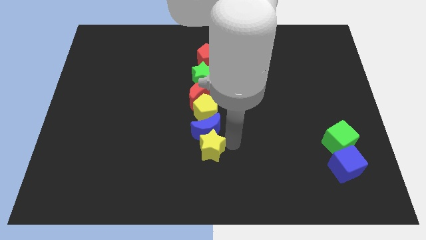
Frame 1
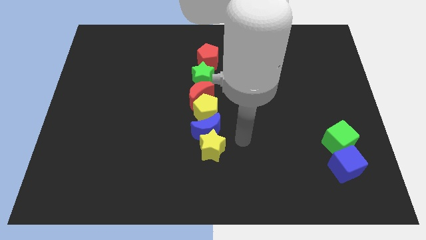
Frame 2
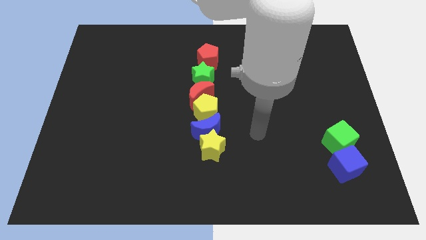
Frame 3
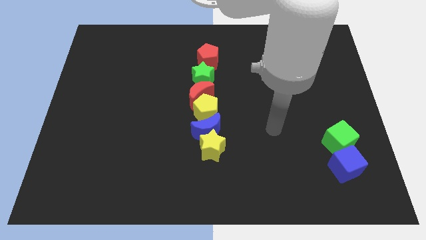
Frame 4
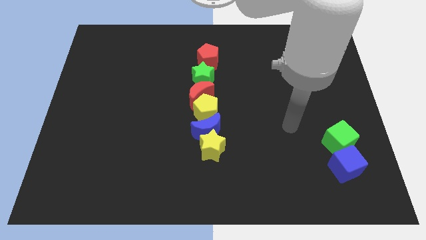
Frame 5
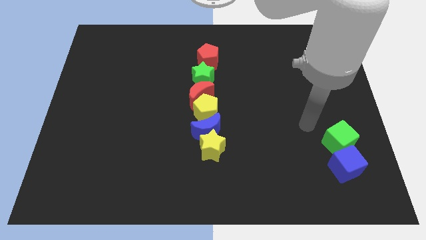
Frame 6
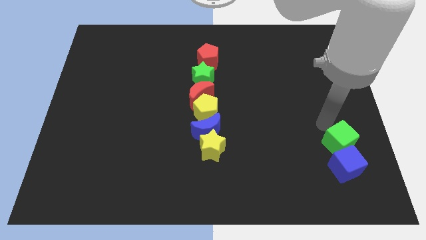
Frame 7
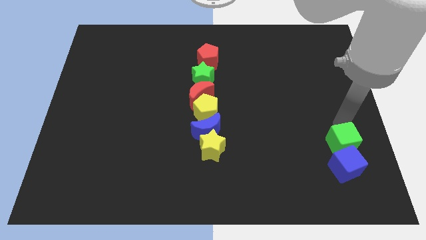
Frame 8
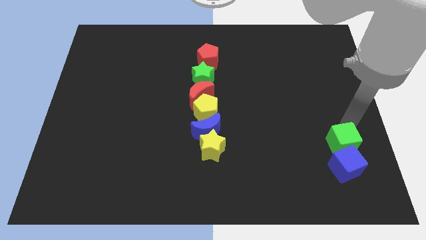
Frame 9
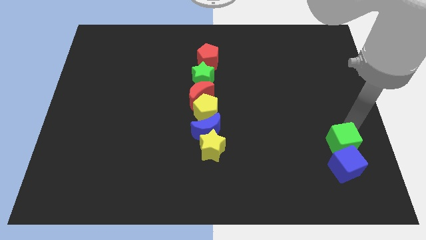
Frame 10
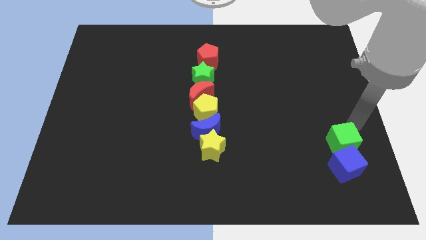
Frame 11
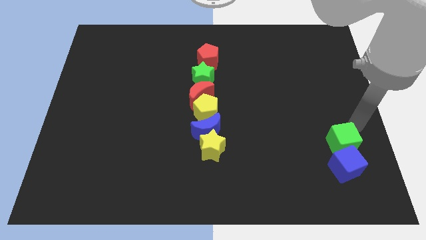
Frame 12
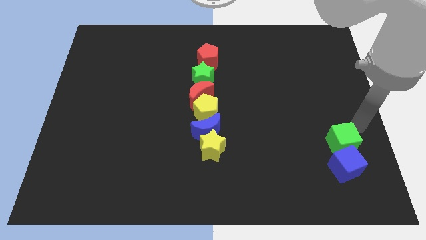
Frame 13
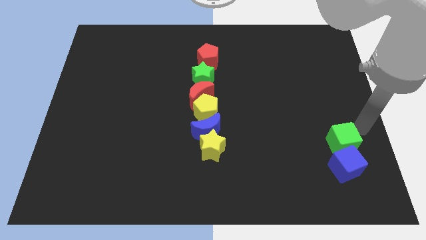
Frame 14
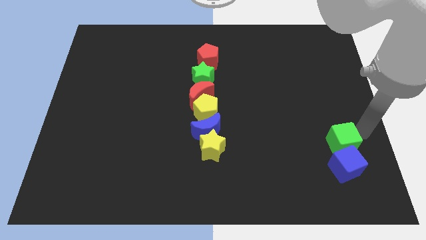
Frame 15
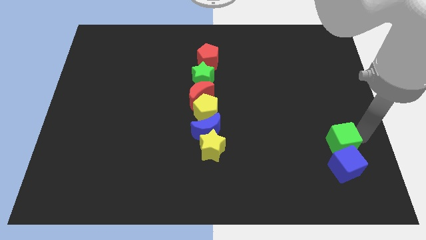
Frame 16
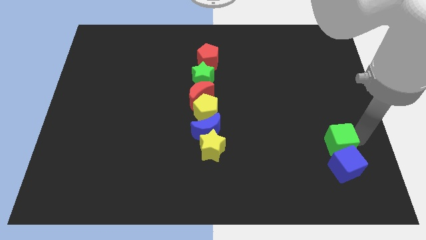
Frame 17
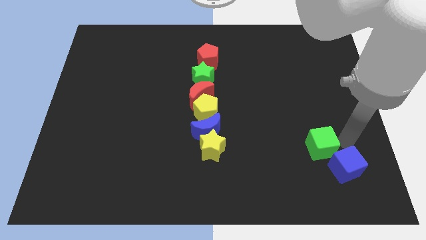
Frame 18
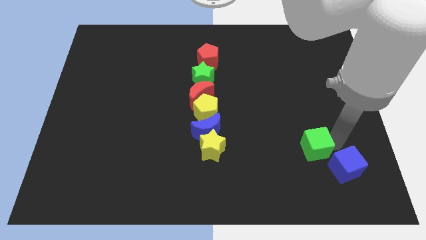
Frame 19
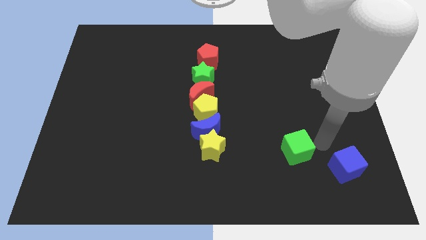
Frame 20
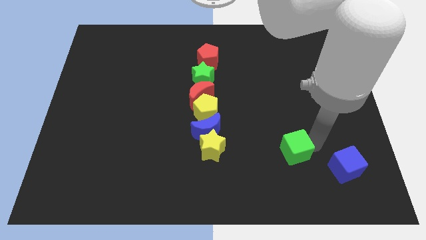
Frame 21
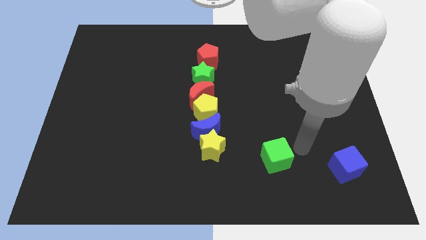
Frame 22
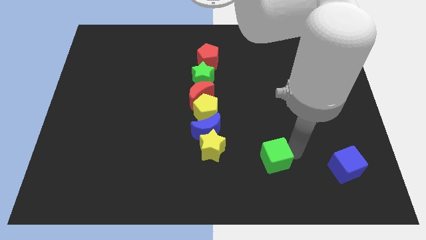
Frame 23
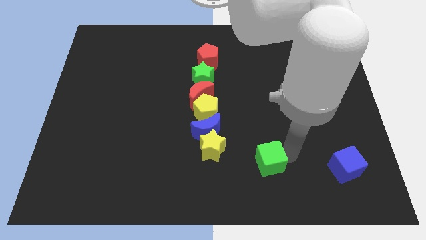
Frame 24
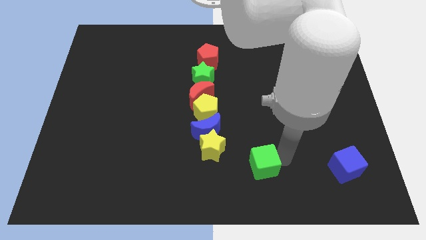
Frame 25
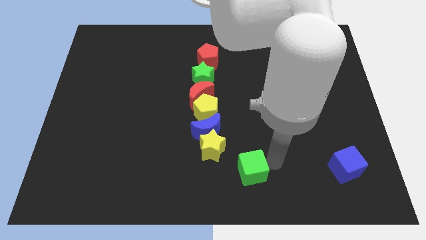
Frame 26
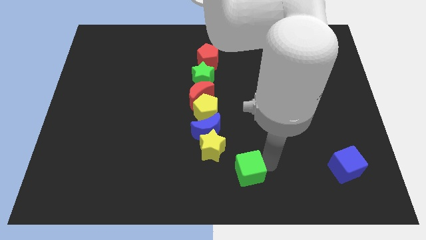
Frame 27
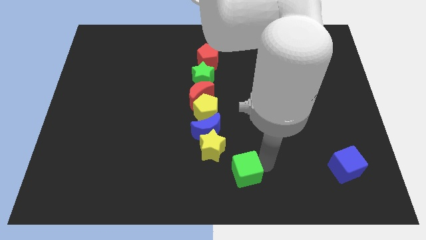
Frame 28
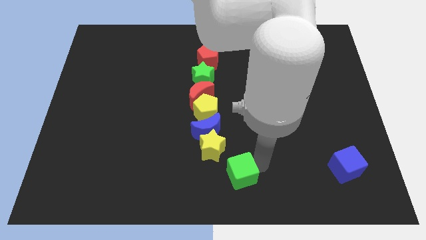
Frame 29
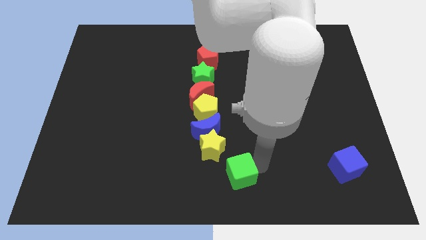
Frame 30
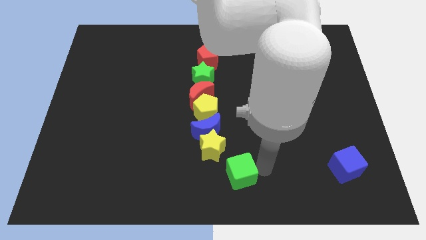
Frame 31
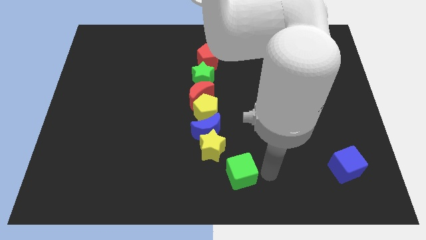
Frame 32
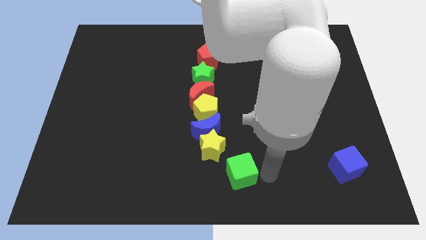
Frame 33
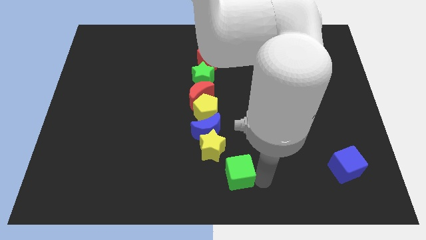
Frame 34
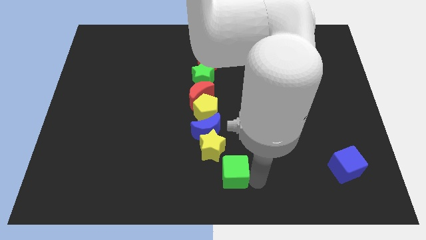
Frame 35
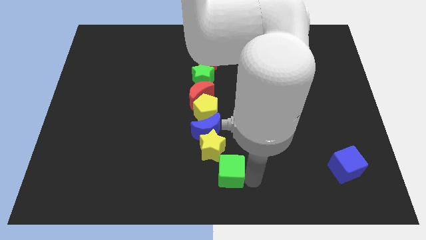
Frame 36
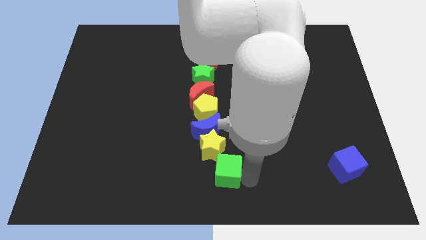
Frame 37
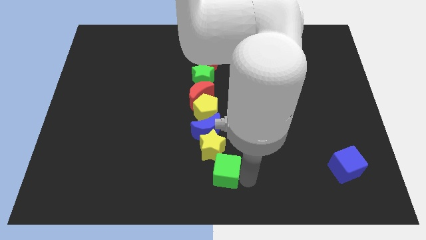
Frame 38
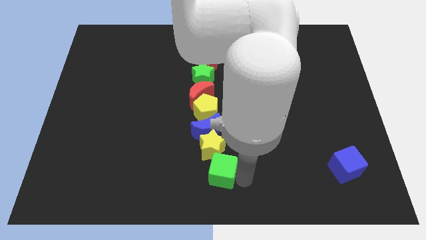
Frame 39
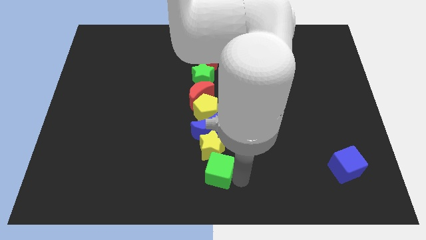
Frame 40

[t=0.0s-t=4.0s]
move the green cube away from the blue cube

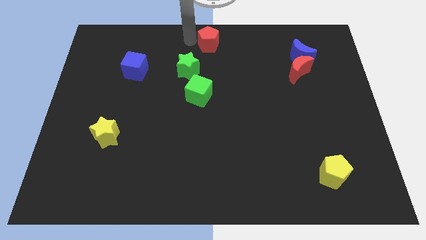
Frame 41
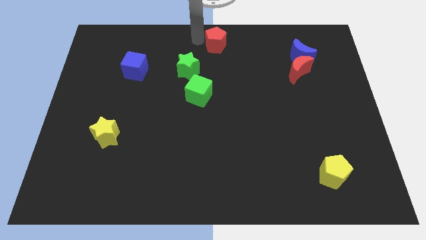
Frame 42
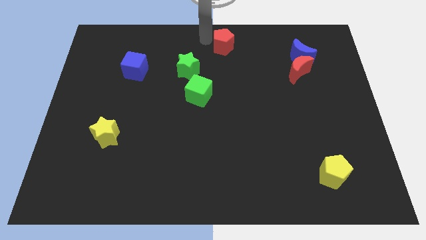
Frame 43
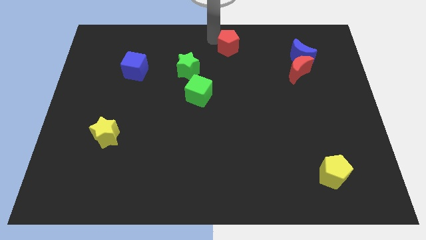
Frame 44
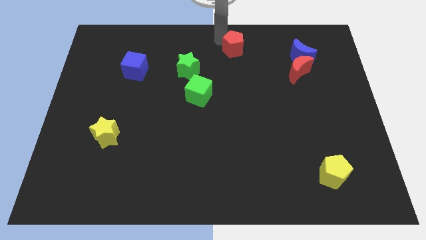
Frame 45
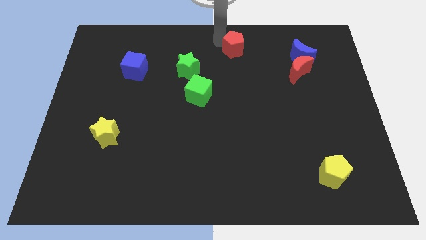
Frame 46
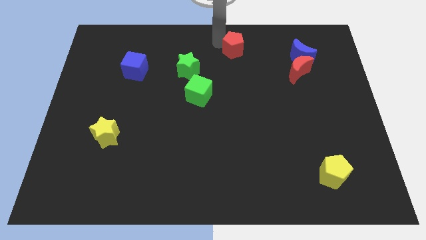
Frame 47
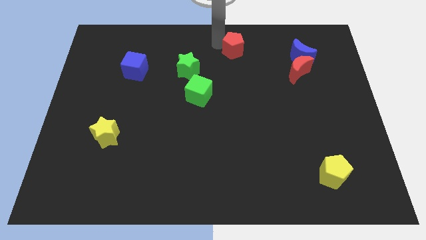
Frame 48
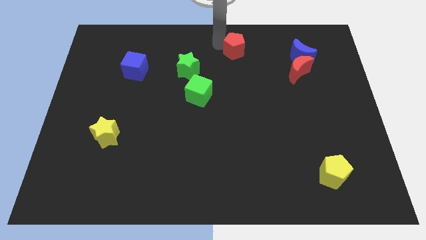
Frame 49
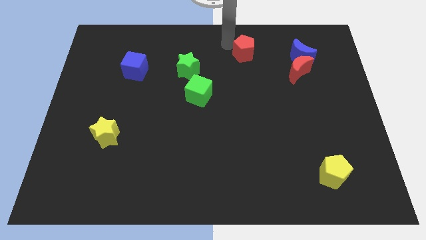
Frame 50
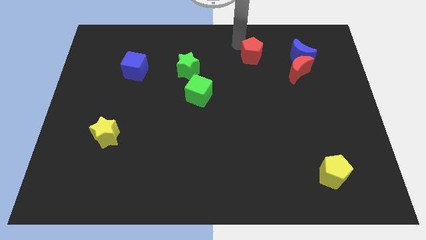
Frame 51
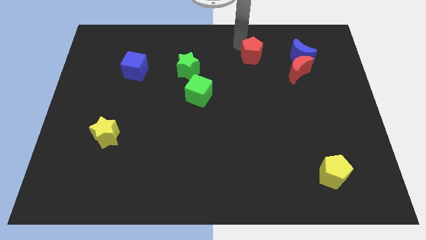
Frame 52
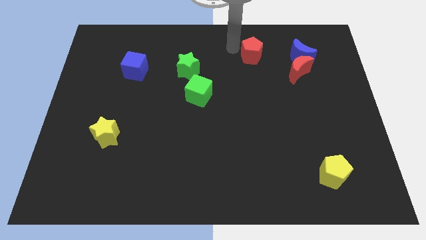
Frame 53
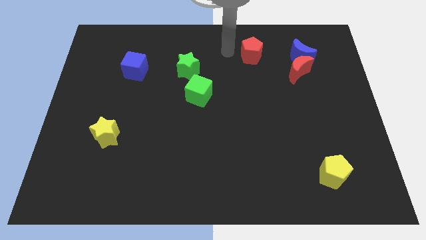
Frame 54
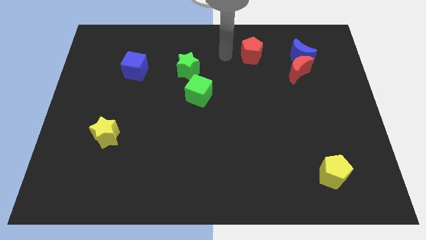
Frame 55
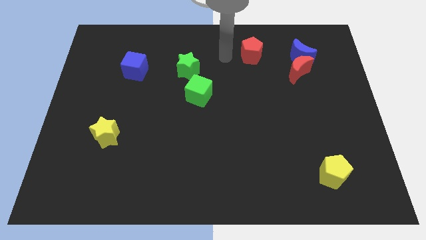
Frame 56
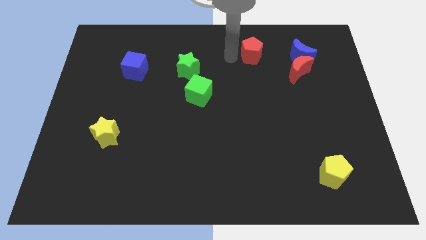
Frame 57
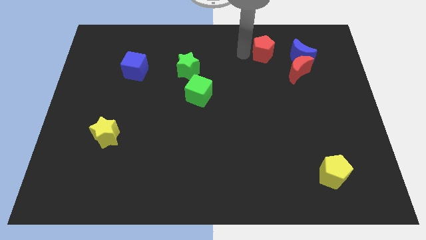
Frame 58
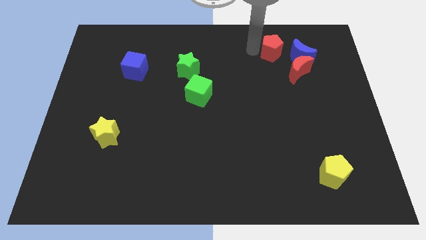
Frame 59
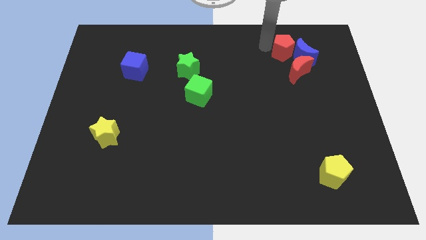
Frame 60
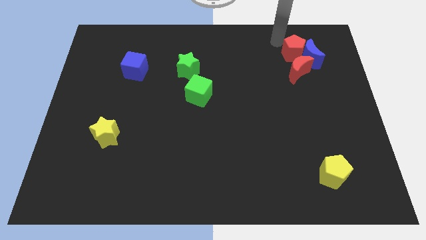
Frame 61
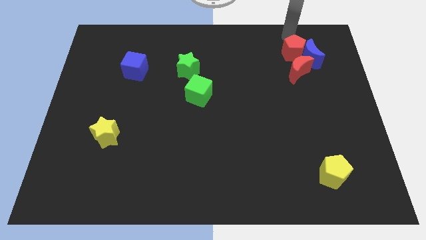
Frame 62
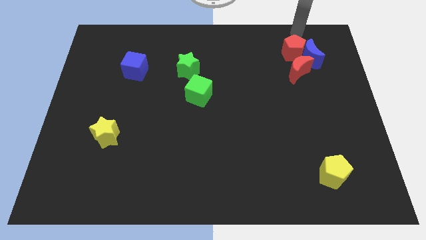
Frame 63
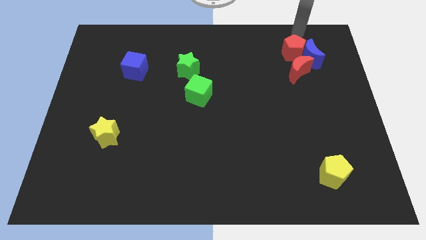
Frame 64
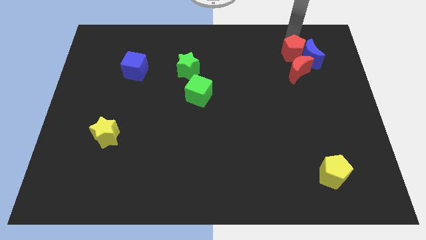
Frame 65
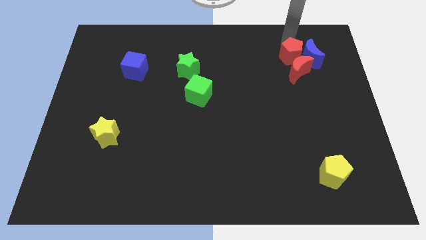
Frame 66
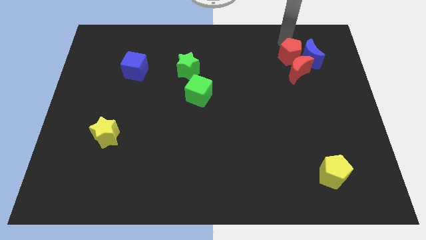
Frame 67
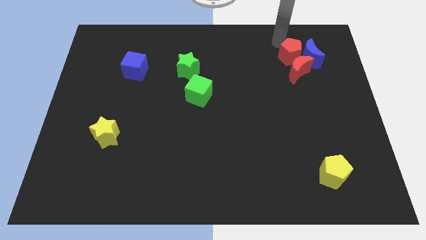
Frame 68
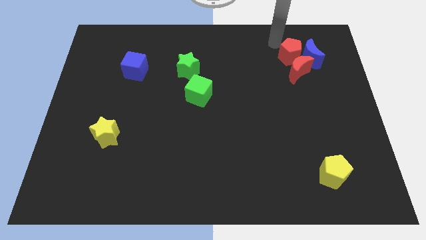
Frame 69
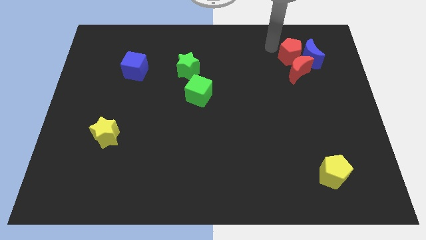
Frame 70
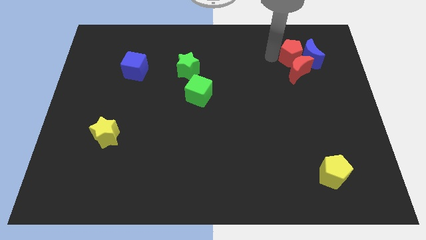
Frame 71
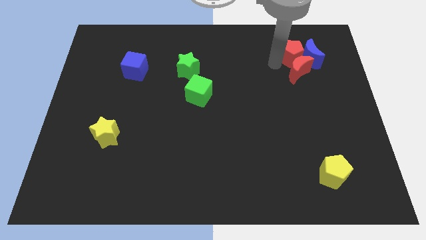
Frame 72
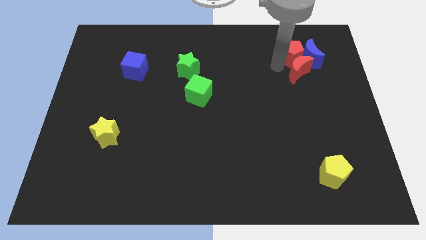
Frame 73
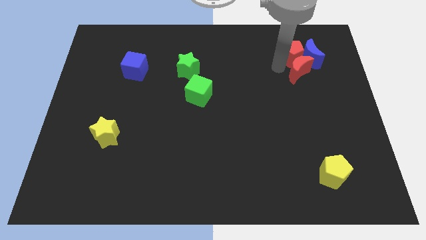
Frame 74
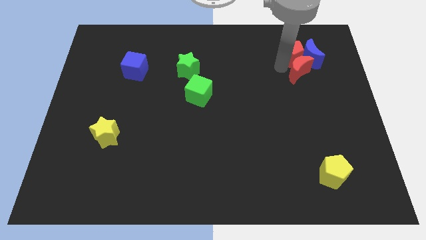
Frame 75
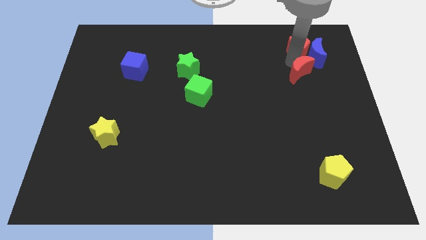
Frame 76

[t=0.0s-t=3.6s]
push the red pentagon in between red and blue moon

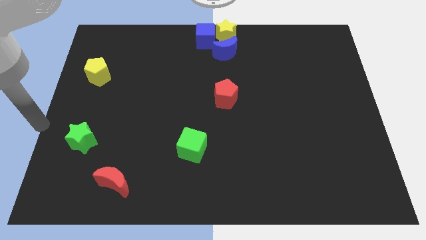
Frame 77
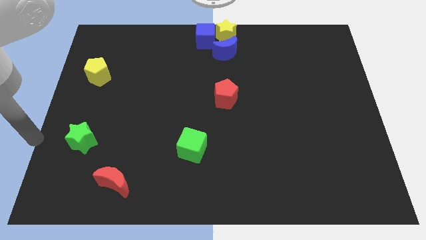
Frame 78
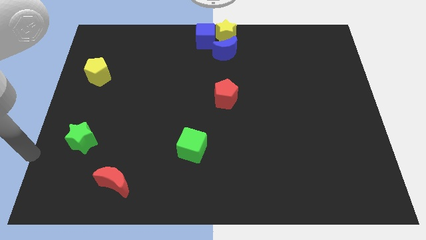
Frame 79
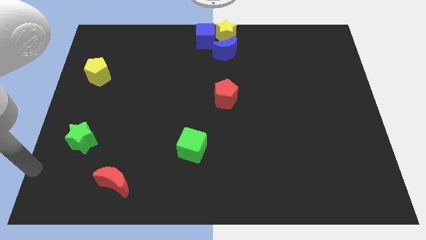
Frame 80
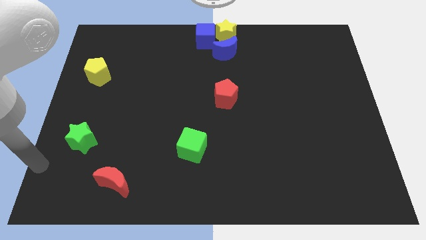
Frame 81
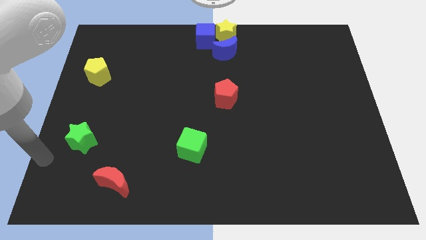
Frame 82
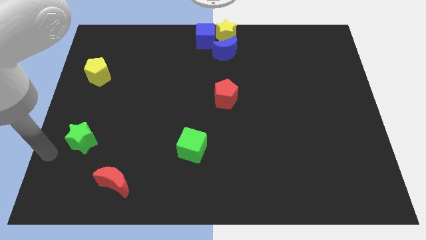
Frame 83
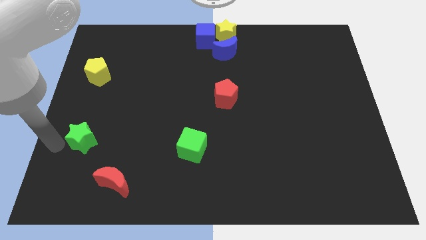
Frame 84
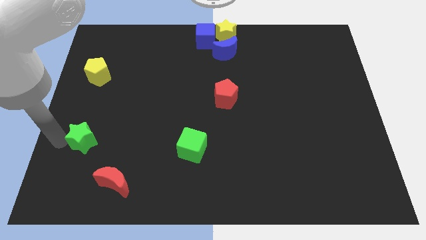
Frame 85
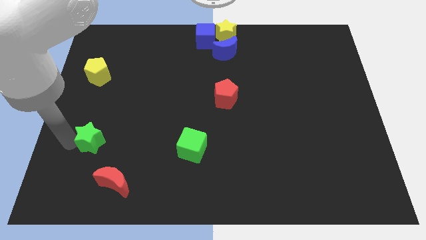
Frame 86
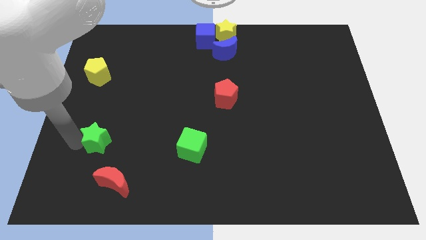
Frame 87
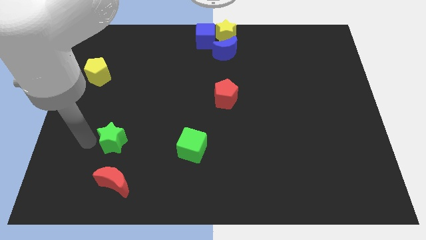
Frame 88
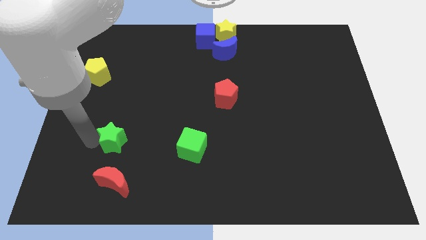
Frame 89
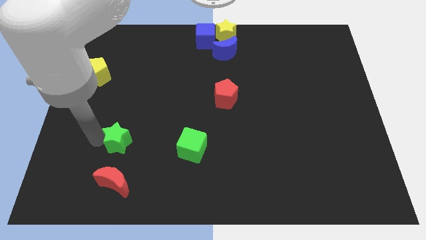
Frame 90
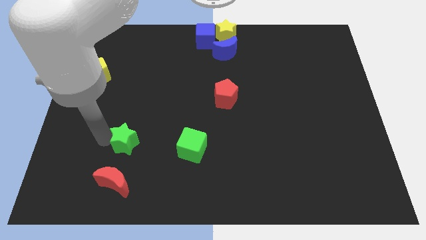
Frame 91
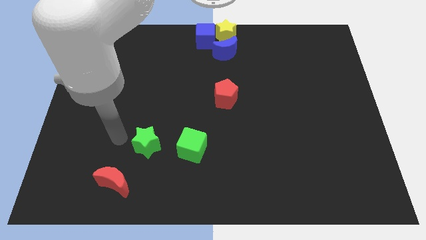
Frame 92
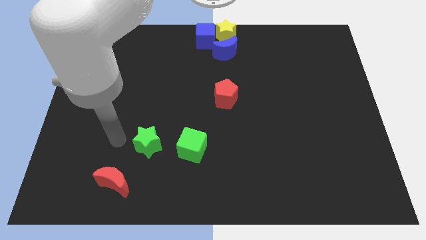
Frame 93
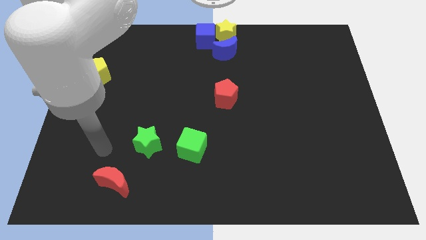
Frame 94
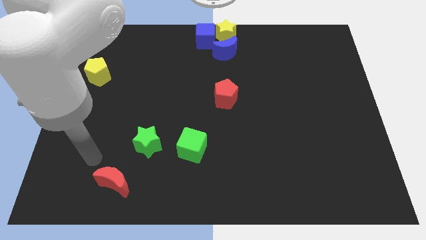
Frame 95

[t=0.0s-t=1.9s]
place the green star to the left of green cube
